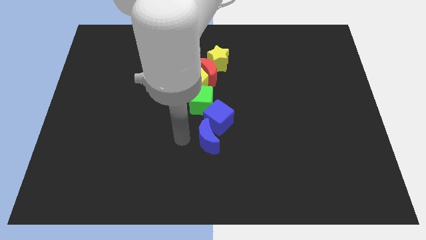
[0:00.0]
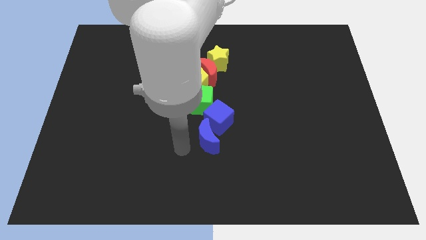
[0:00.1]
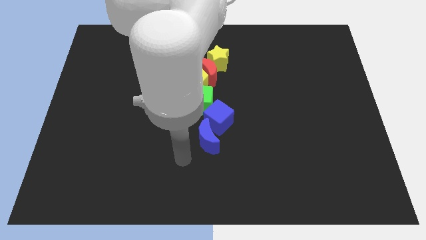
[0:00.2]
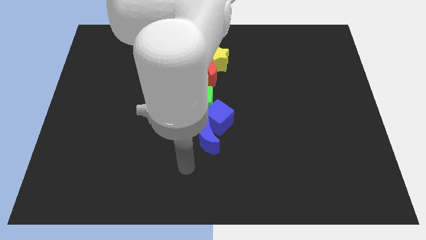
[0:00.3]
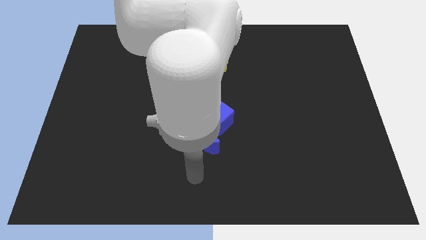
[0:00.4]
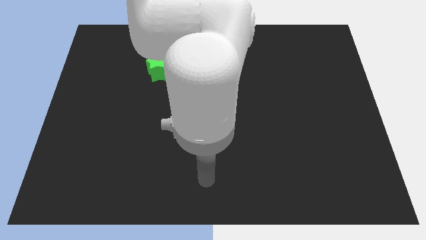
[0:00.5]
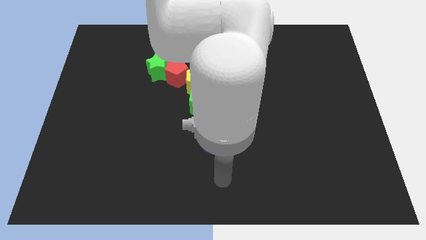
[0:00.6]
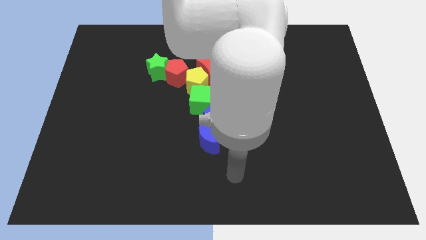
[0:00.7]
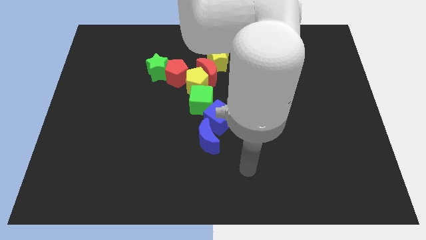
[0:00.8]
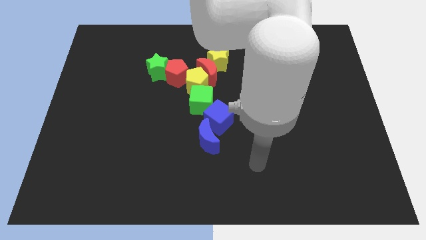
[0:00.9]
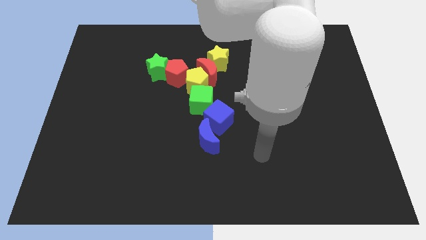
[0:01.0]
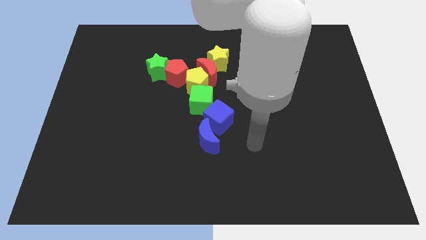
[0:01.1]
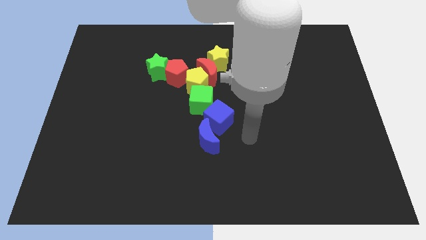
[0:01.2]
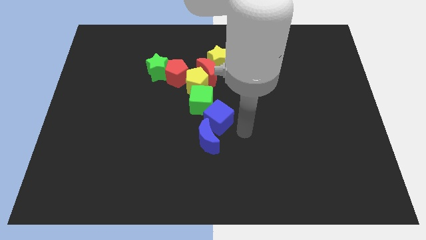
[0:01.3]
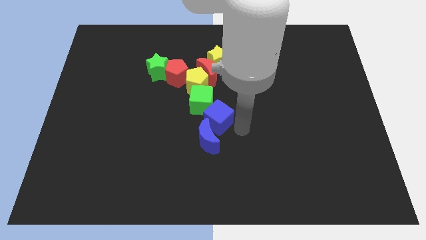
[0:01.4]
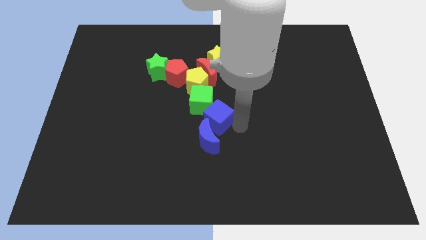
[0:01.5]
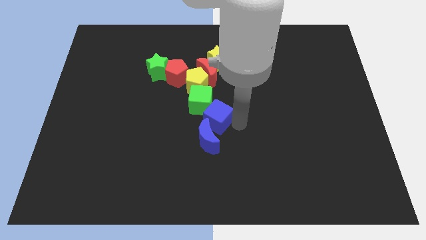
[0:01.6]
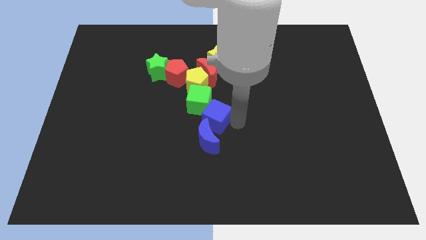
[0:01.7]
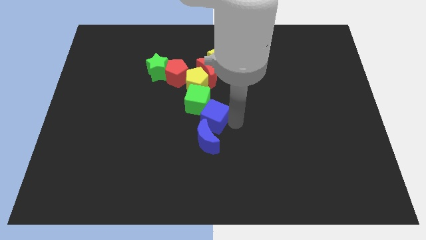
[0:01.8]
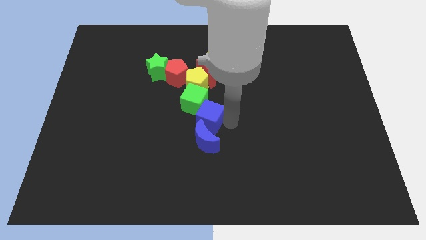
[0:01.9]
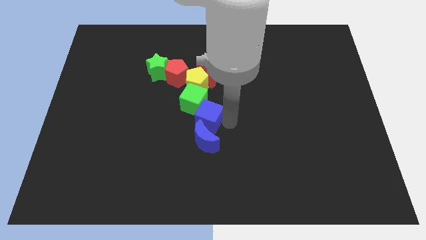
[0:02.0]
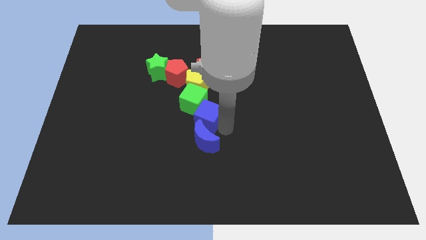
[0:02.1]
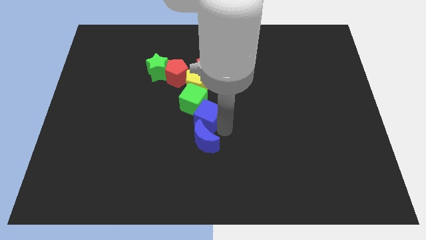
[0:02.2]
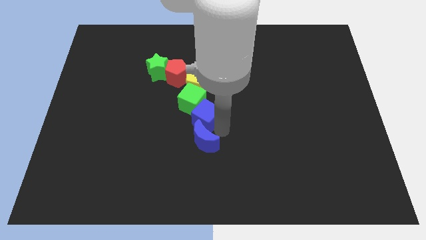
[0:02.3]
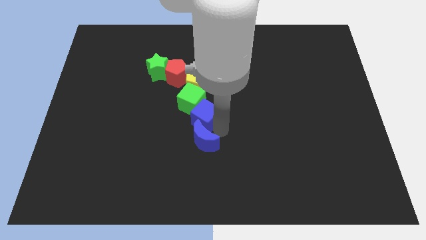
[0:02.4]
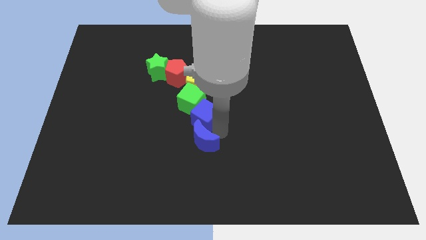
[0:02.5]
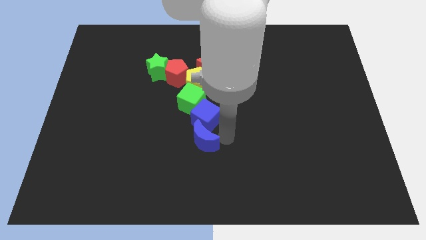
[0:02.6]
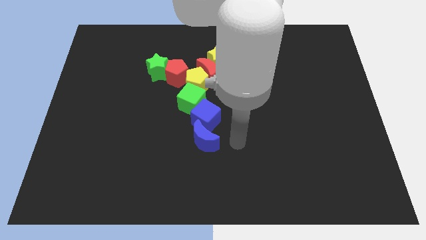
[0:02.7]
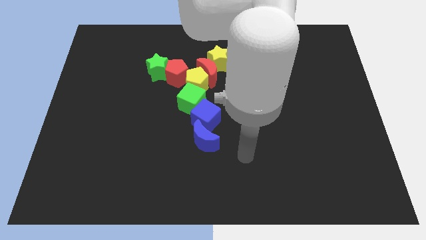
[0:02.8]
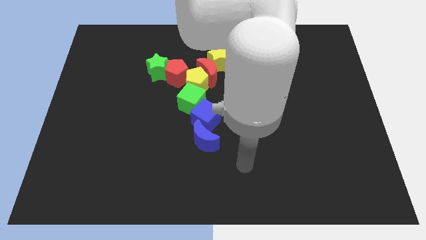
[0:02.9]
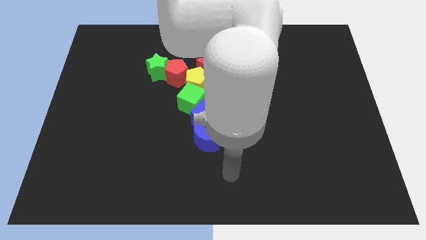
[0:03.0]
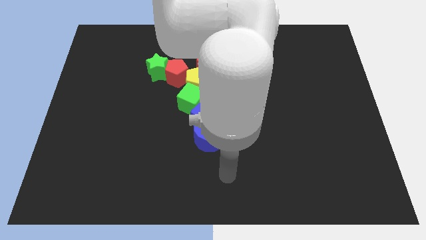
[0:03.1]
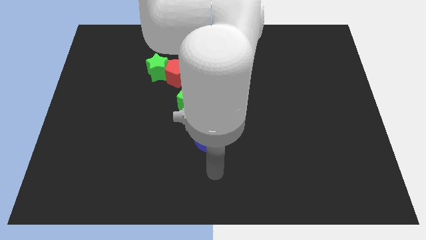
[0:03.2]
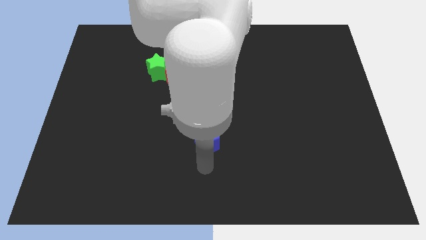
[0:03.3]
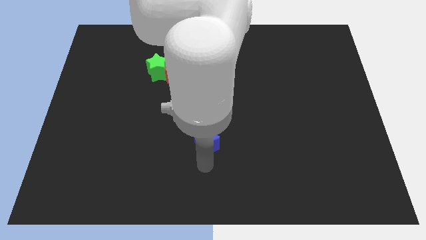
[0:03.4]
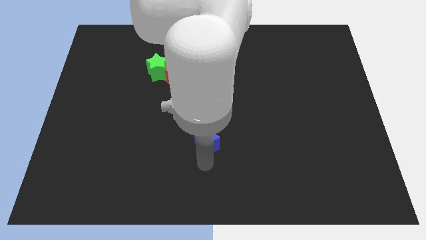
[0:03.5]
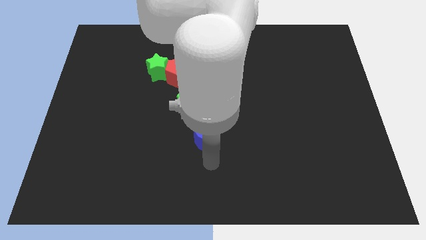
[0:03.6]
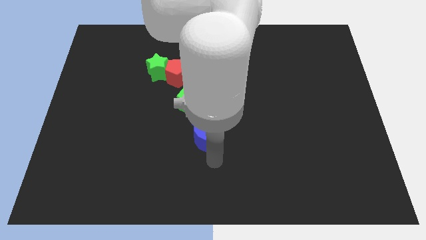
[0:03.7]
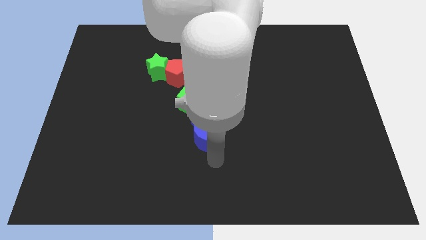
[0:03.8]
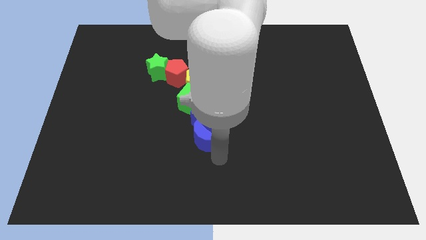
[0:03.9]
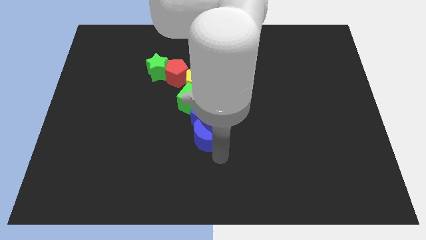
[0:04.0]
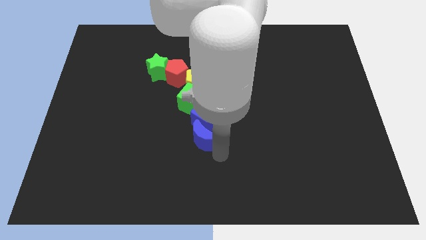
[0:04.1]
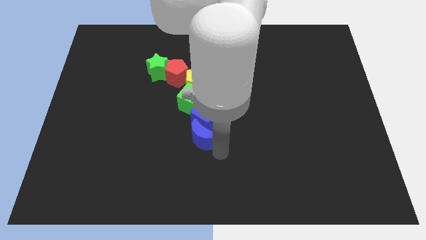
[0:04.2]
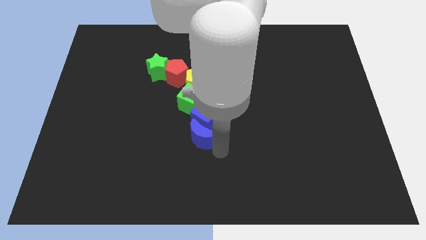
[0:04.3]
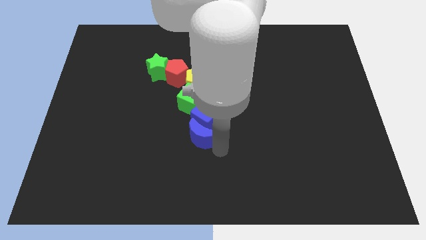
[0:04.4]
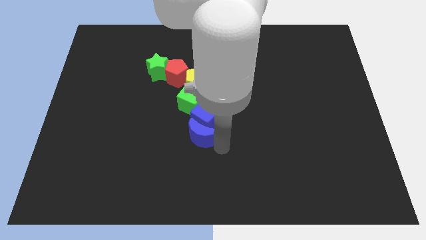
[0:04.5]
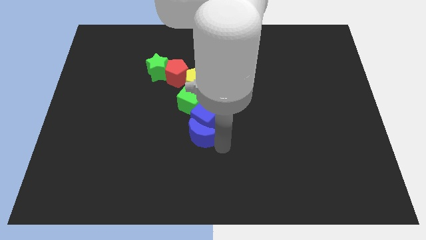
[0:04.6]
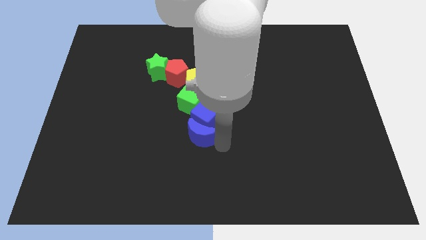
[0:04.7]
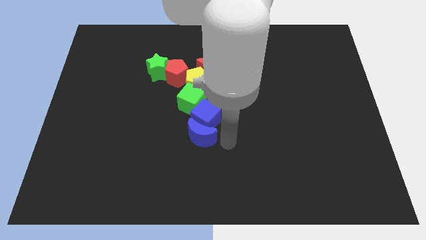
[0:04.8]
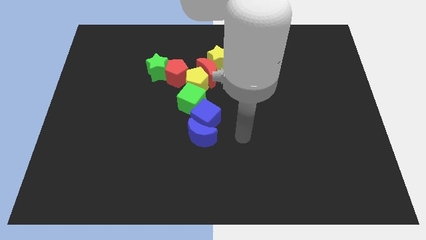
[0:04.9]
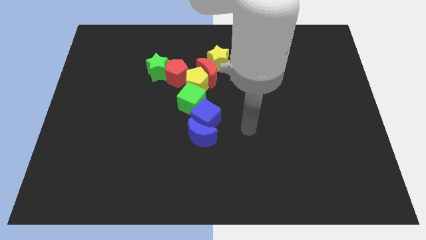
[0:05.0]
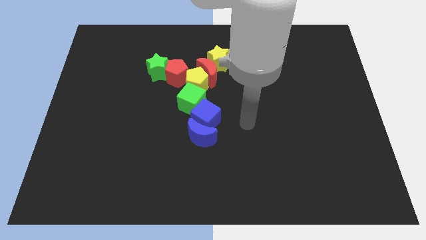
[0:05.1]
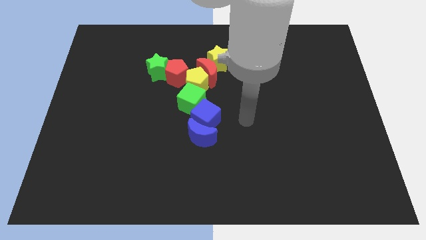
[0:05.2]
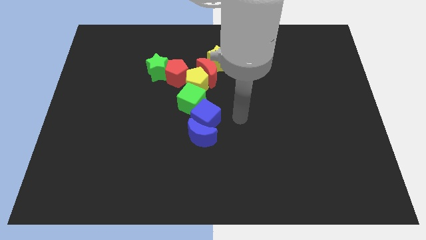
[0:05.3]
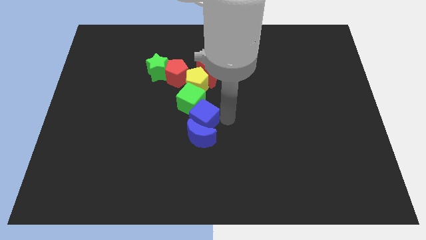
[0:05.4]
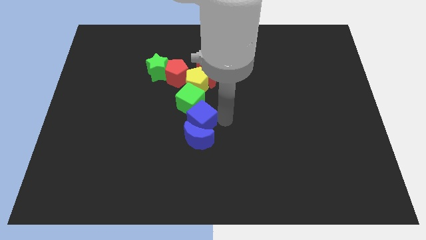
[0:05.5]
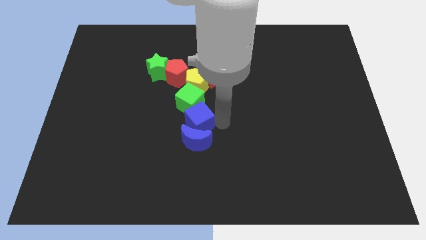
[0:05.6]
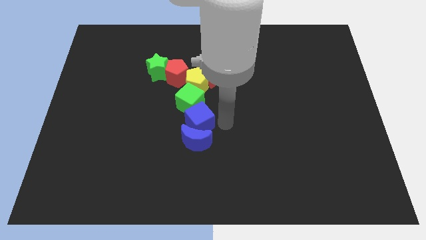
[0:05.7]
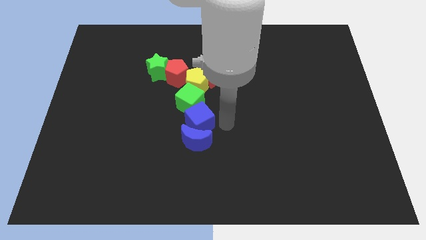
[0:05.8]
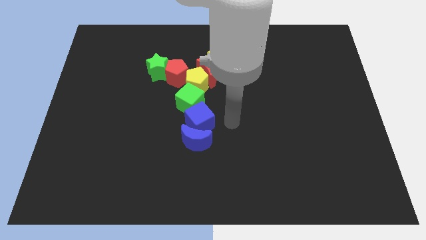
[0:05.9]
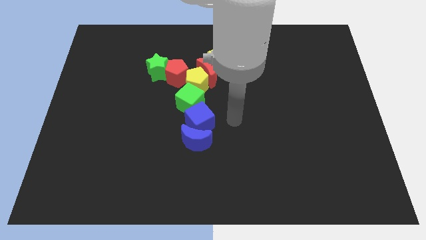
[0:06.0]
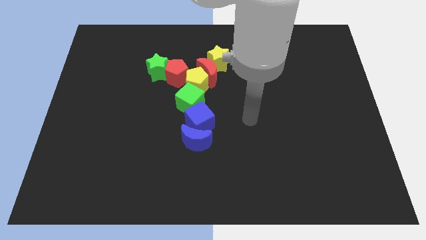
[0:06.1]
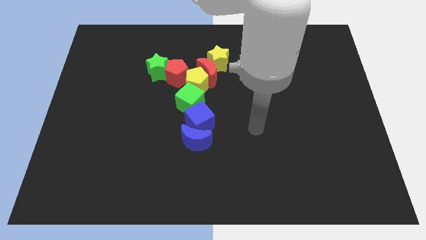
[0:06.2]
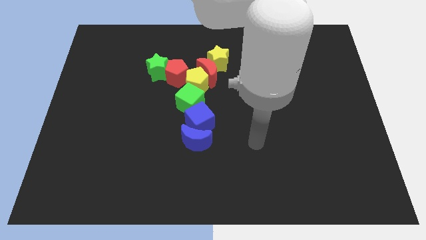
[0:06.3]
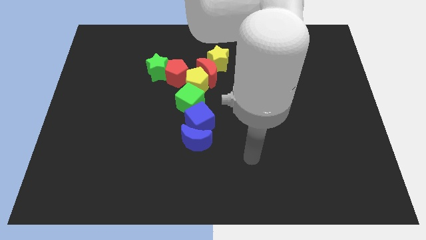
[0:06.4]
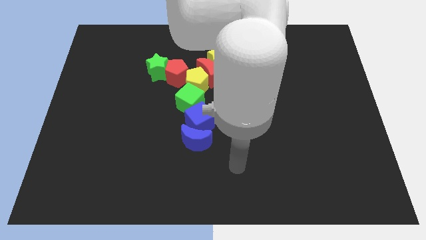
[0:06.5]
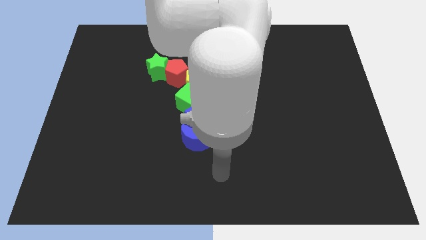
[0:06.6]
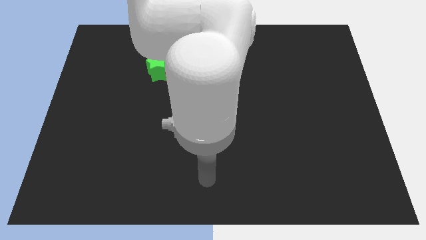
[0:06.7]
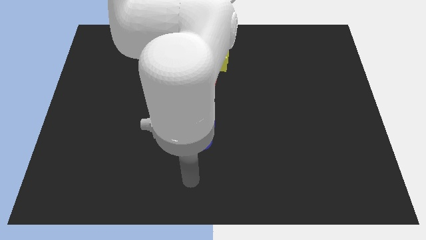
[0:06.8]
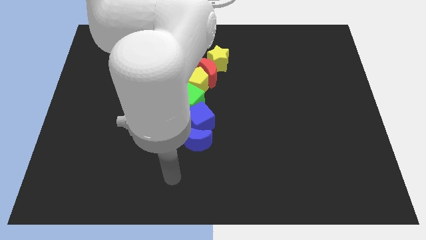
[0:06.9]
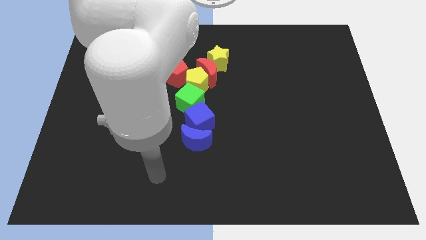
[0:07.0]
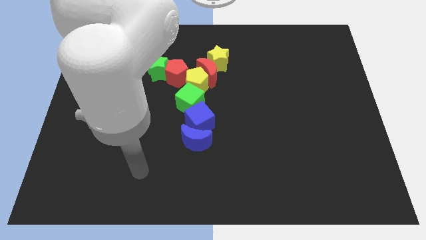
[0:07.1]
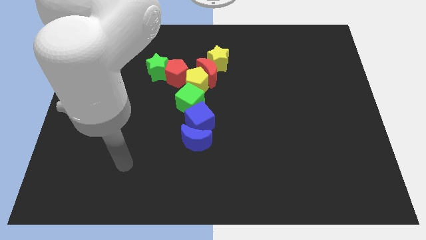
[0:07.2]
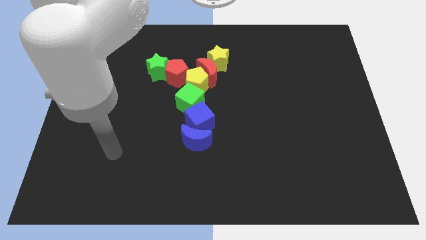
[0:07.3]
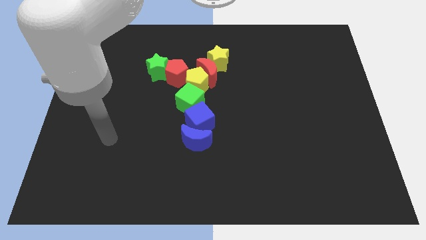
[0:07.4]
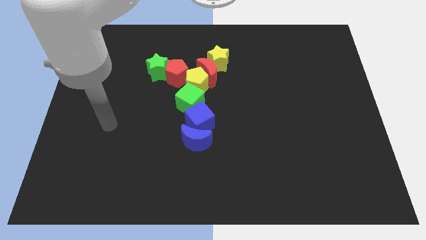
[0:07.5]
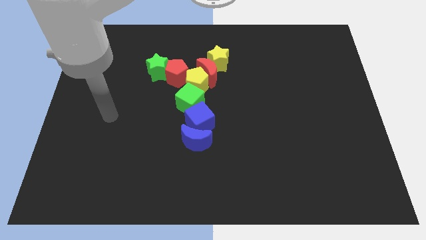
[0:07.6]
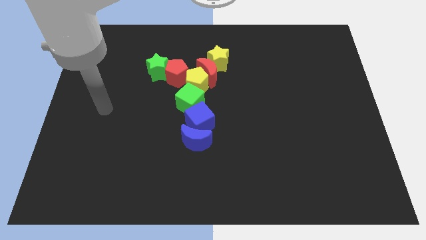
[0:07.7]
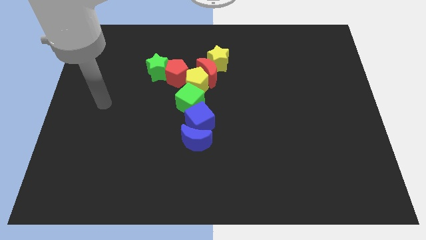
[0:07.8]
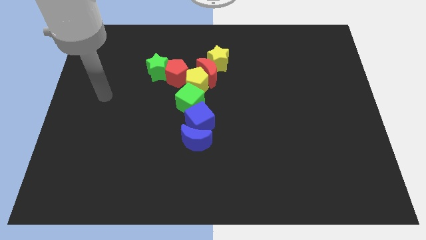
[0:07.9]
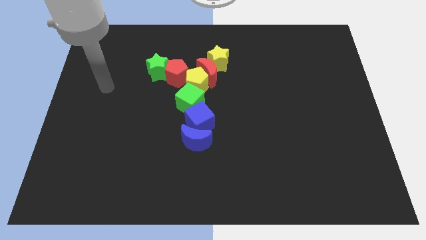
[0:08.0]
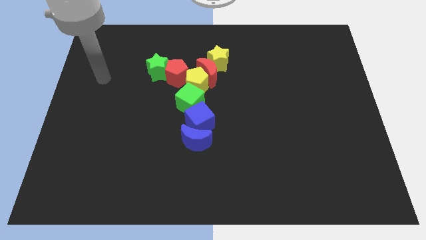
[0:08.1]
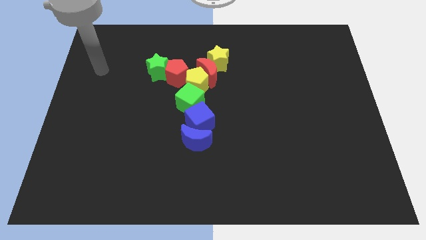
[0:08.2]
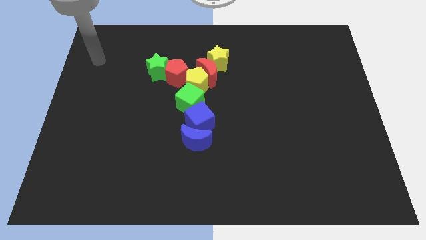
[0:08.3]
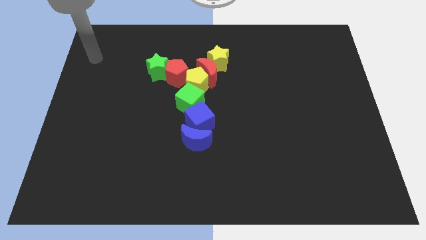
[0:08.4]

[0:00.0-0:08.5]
adjust the blocks to form yshape

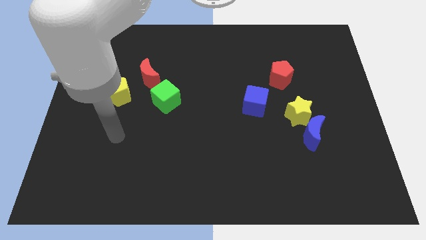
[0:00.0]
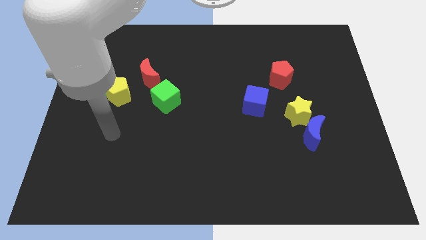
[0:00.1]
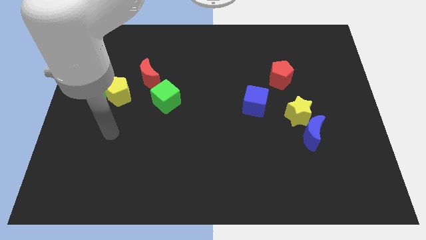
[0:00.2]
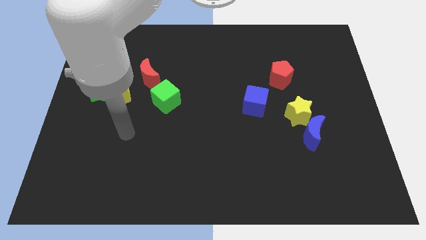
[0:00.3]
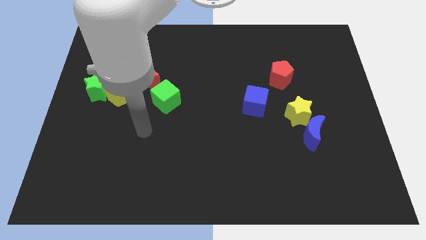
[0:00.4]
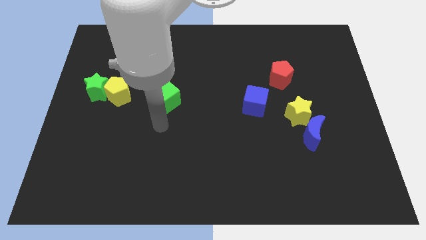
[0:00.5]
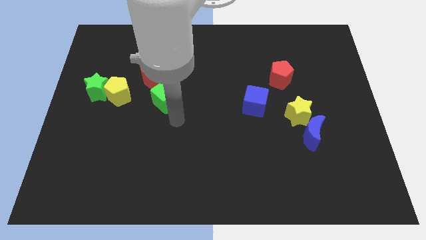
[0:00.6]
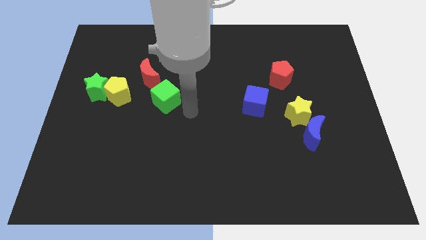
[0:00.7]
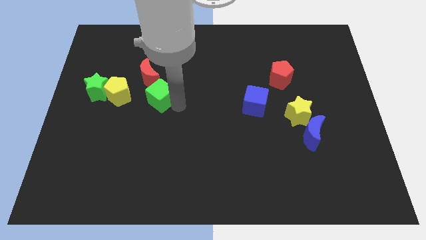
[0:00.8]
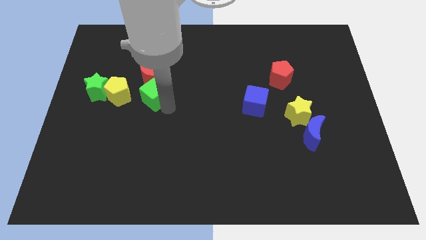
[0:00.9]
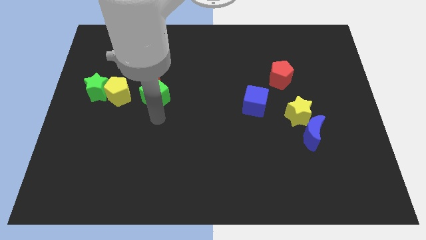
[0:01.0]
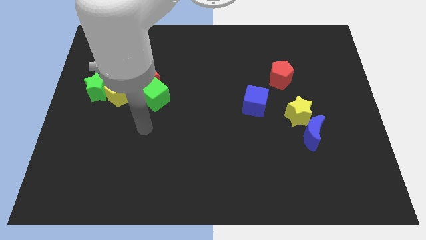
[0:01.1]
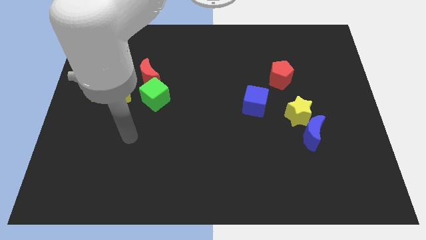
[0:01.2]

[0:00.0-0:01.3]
move the green cube slightly into the bottom side of the red crescent
